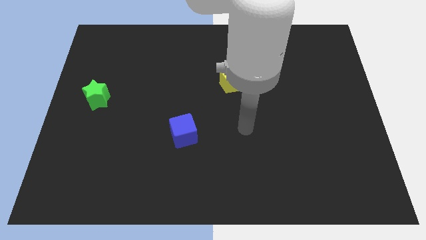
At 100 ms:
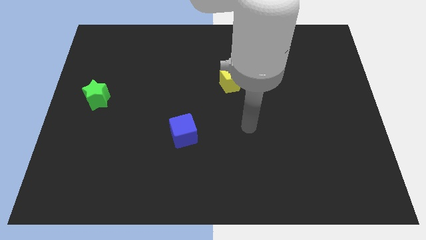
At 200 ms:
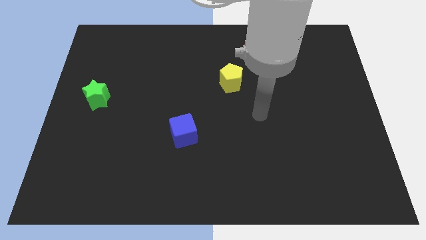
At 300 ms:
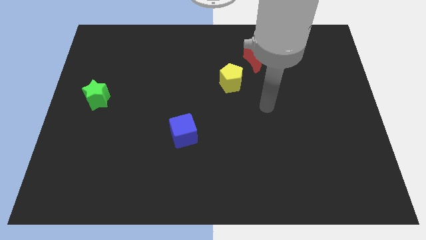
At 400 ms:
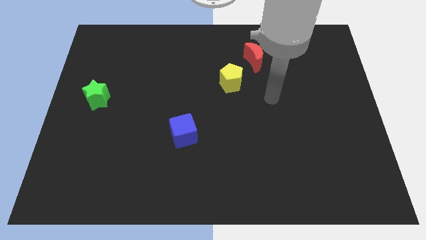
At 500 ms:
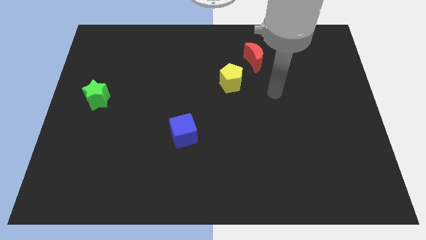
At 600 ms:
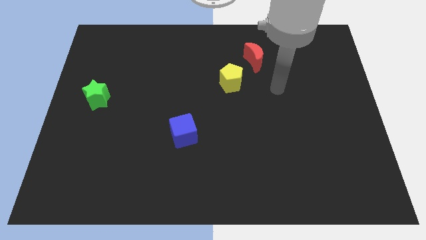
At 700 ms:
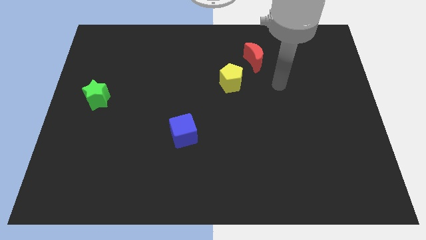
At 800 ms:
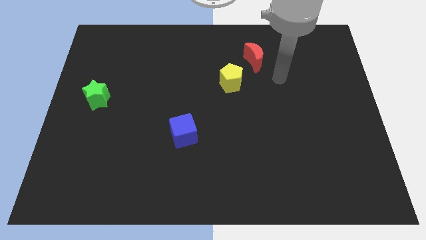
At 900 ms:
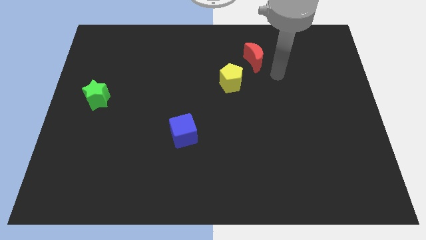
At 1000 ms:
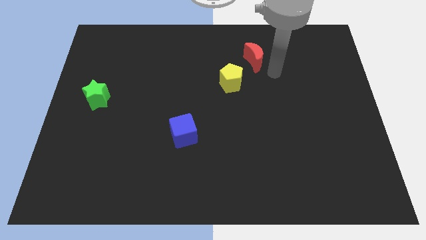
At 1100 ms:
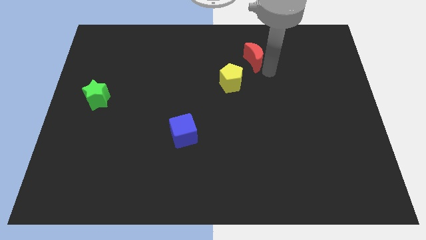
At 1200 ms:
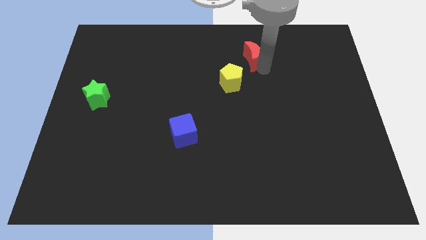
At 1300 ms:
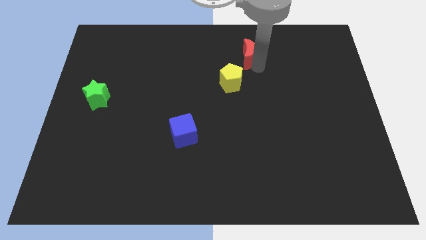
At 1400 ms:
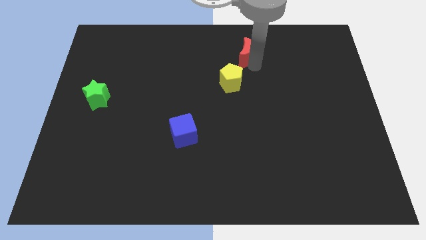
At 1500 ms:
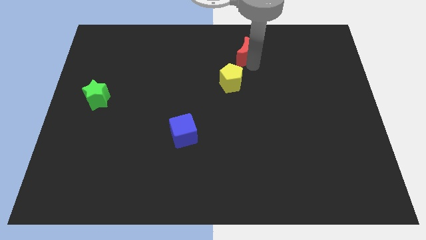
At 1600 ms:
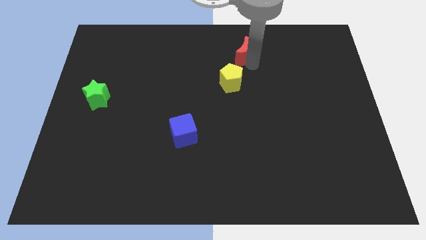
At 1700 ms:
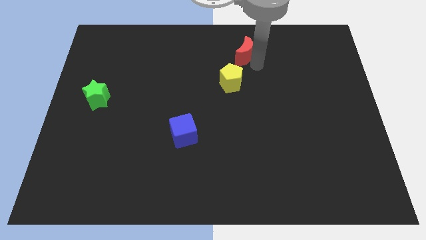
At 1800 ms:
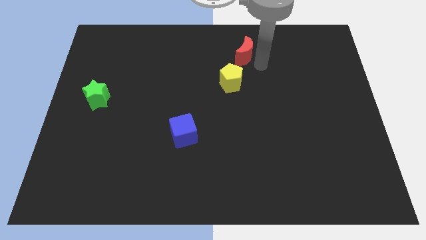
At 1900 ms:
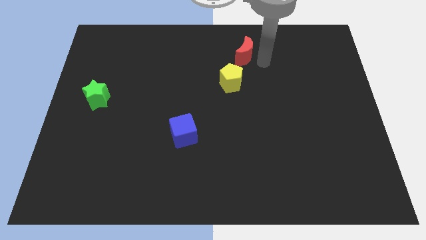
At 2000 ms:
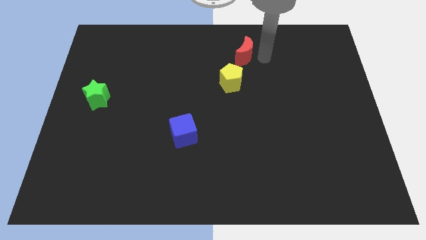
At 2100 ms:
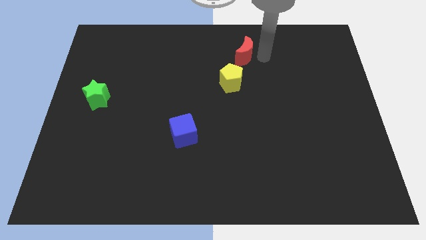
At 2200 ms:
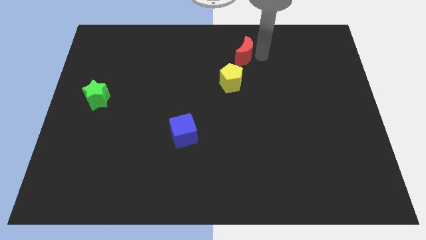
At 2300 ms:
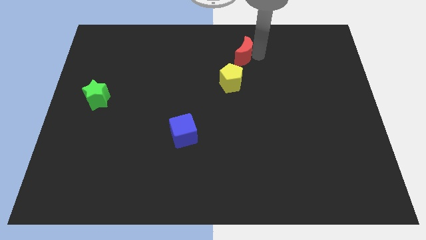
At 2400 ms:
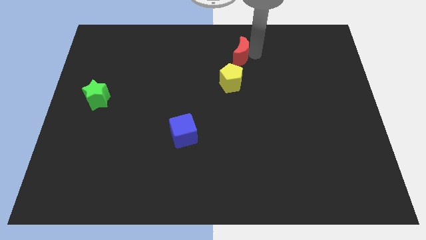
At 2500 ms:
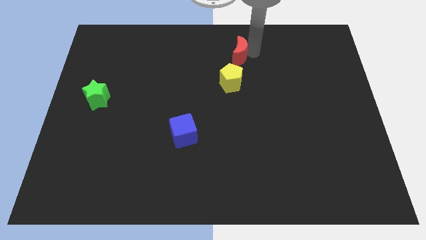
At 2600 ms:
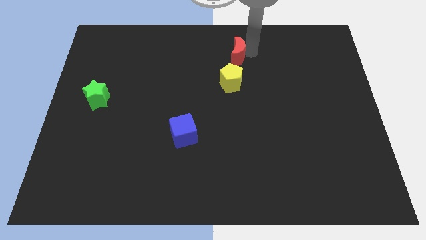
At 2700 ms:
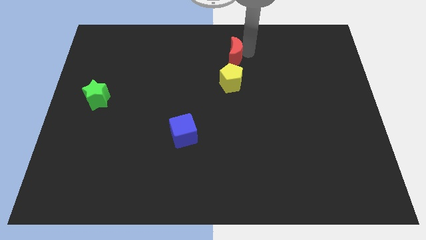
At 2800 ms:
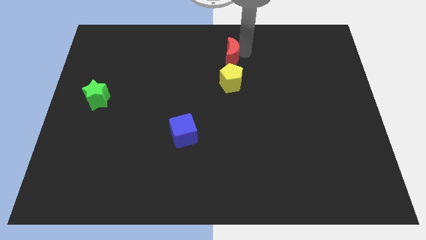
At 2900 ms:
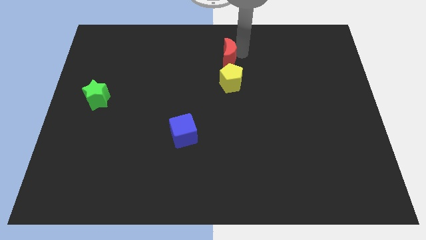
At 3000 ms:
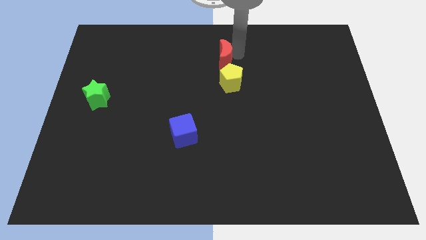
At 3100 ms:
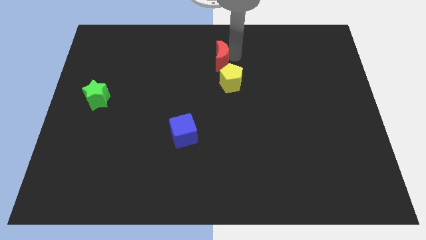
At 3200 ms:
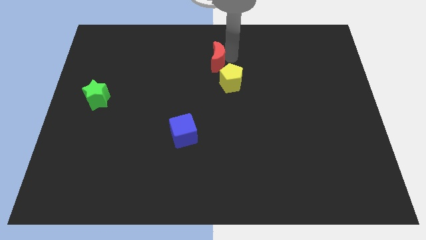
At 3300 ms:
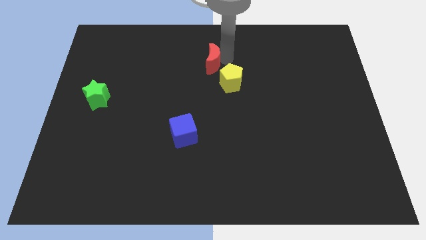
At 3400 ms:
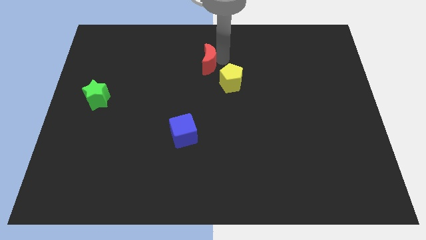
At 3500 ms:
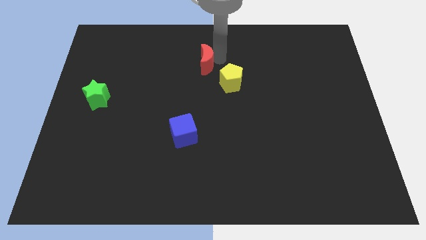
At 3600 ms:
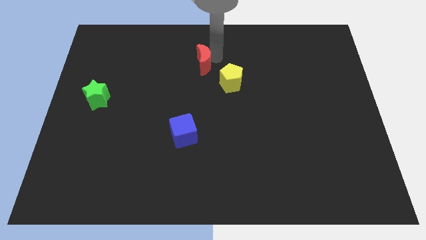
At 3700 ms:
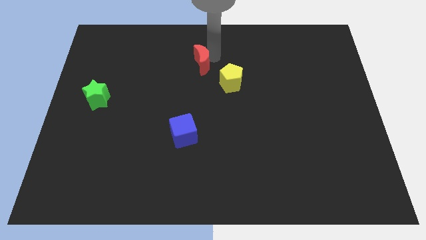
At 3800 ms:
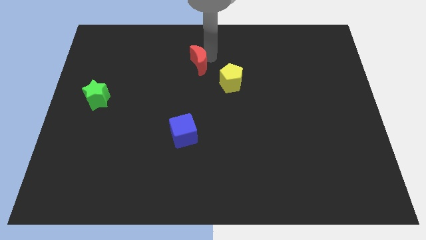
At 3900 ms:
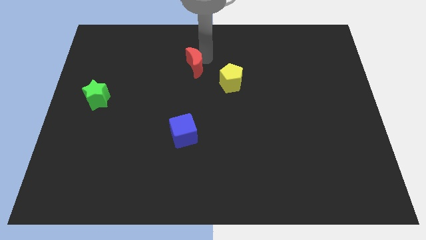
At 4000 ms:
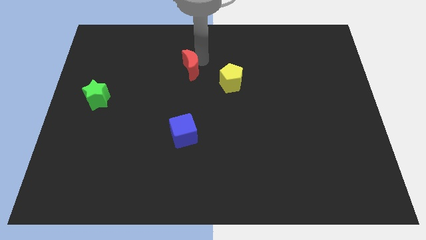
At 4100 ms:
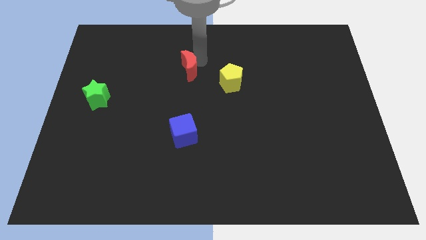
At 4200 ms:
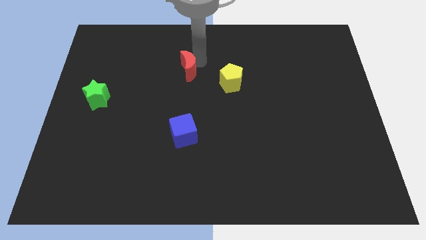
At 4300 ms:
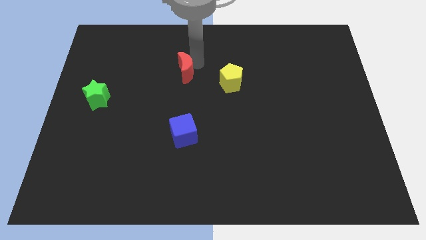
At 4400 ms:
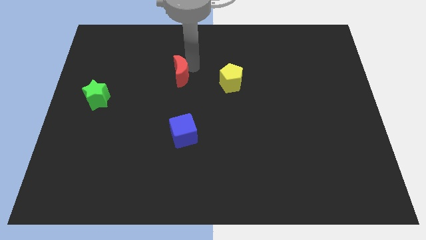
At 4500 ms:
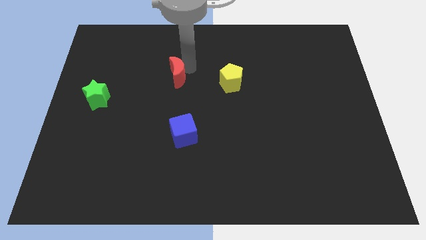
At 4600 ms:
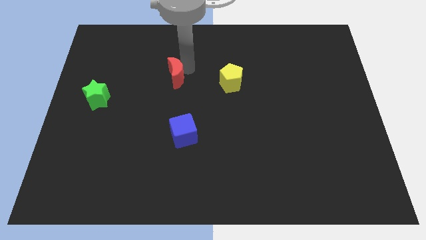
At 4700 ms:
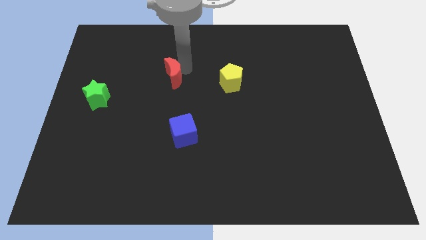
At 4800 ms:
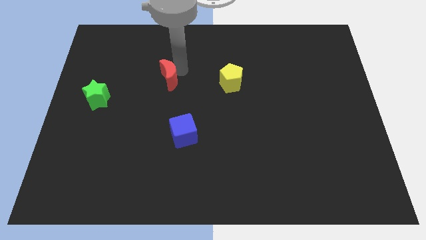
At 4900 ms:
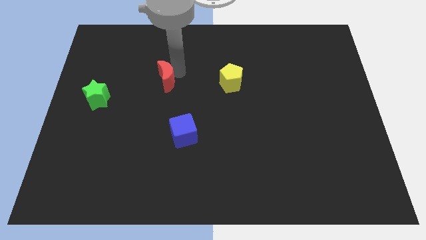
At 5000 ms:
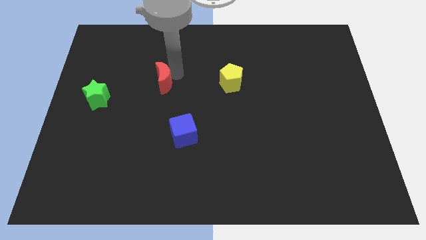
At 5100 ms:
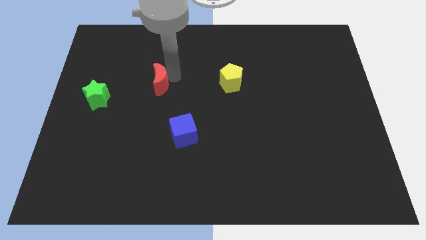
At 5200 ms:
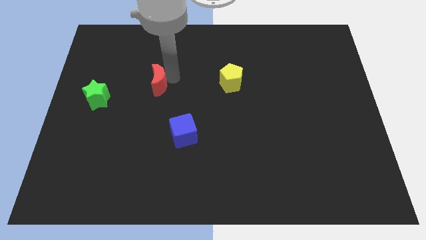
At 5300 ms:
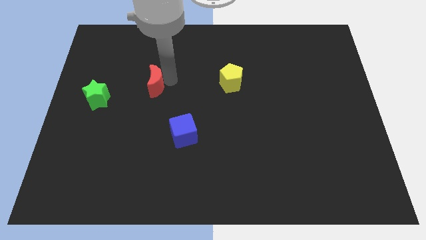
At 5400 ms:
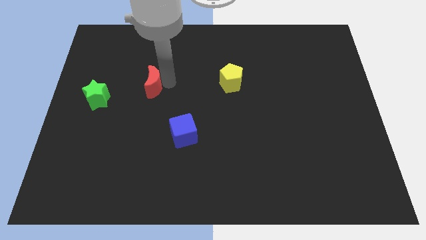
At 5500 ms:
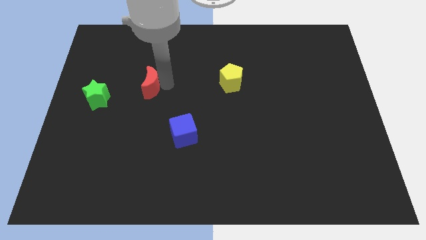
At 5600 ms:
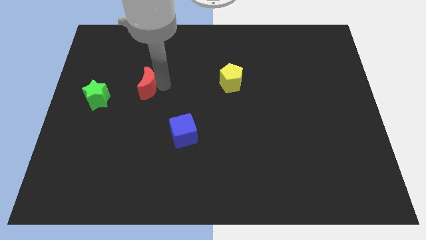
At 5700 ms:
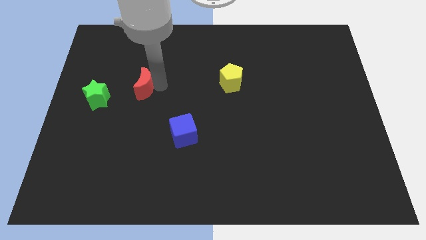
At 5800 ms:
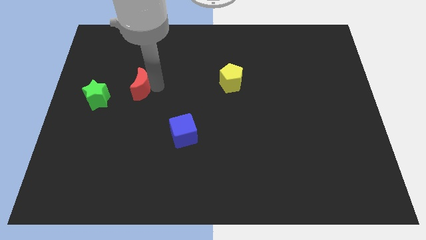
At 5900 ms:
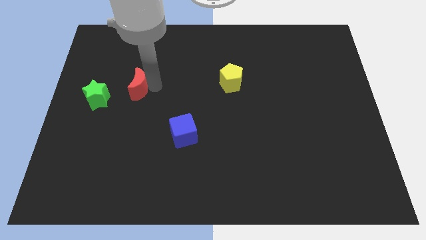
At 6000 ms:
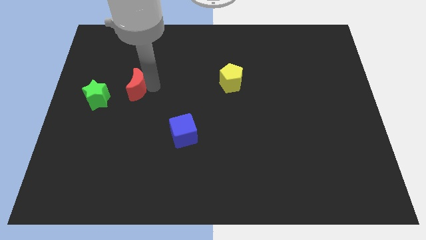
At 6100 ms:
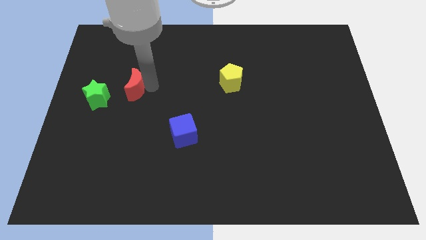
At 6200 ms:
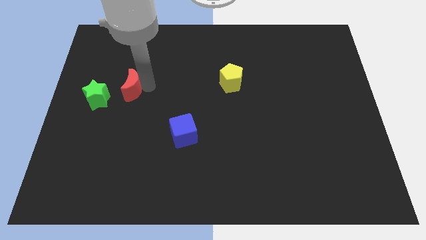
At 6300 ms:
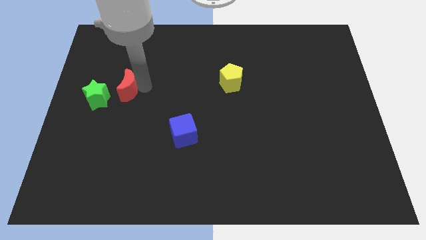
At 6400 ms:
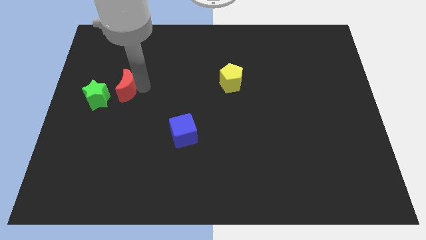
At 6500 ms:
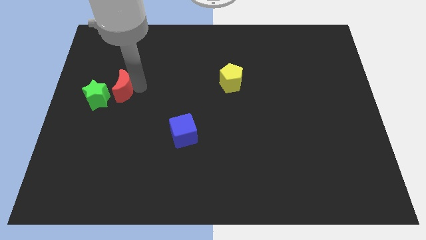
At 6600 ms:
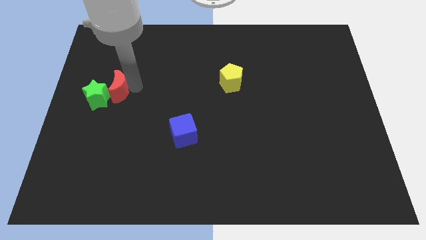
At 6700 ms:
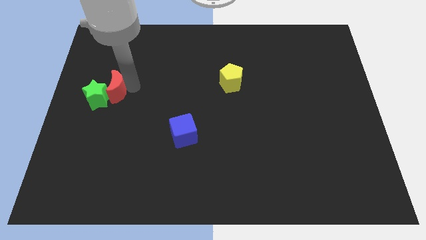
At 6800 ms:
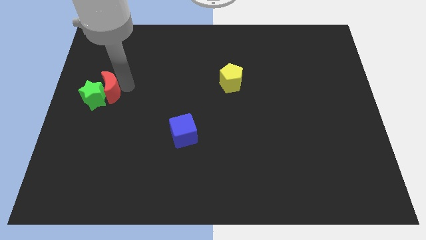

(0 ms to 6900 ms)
push the red moon next to the green block

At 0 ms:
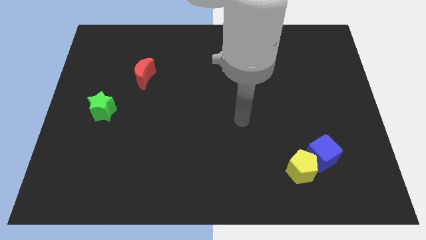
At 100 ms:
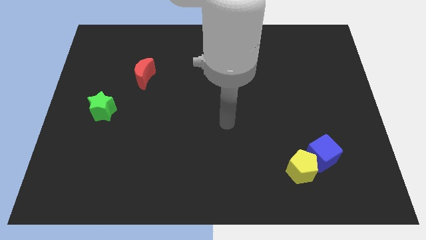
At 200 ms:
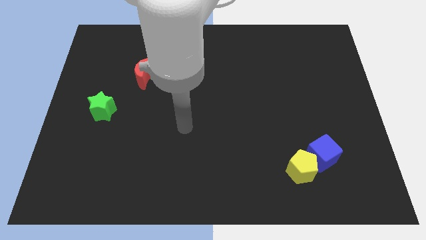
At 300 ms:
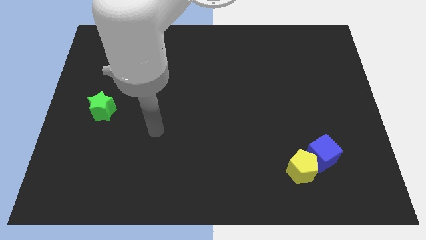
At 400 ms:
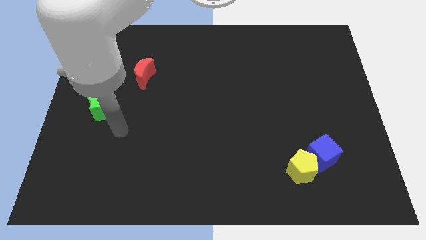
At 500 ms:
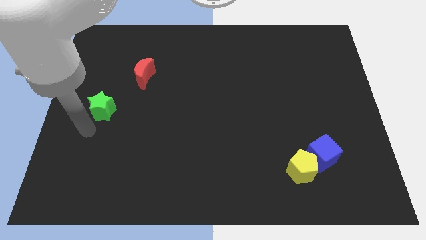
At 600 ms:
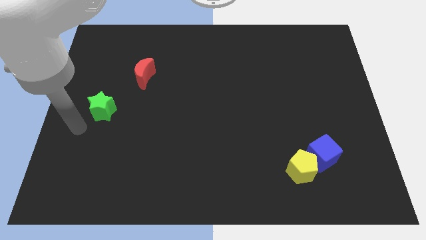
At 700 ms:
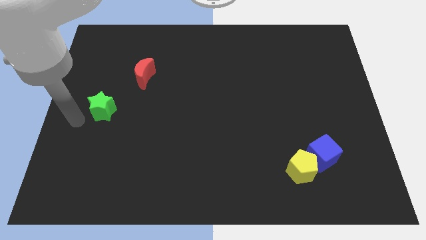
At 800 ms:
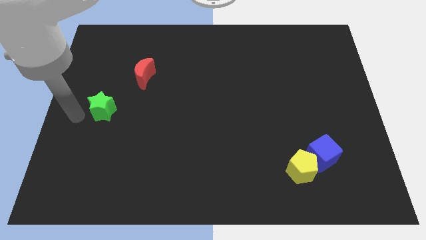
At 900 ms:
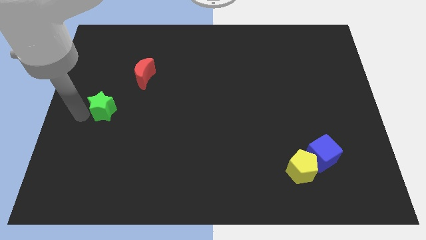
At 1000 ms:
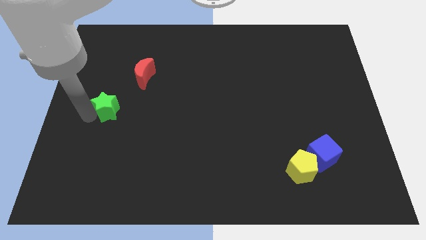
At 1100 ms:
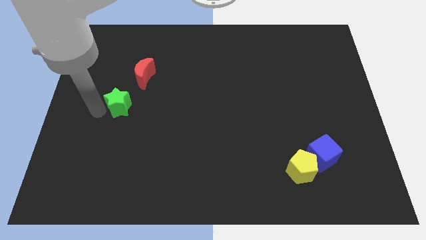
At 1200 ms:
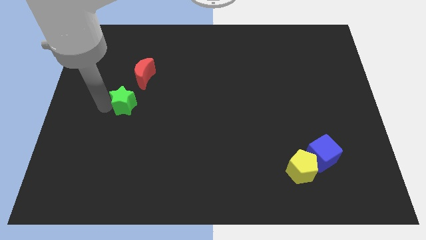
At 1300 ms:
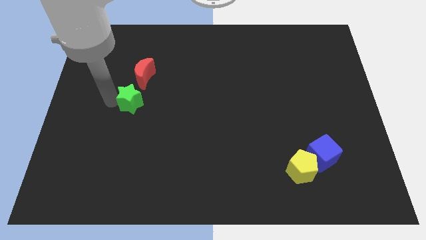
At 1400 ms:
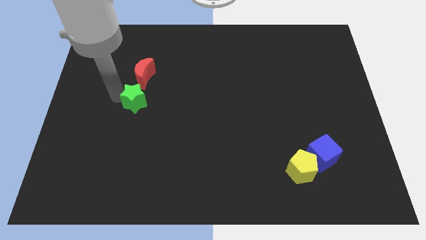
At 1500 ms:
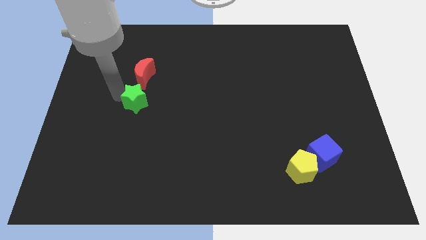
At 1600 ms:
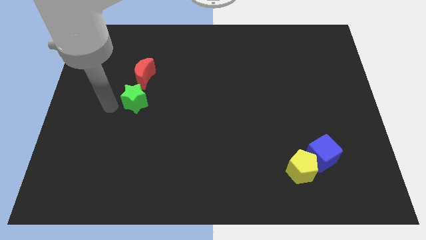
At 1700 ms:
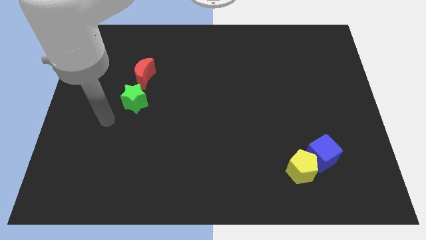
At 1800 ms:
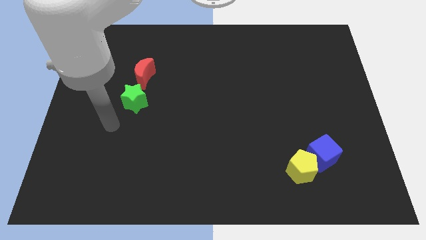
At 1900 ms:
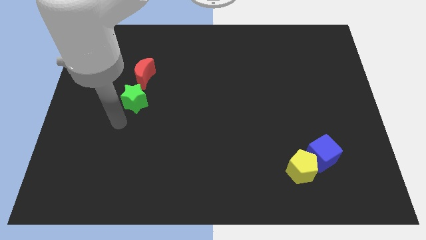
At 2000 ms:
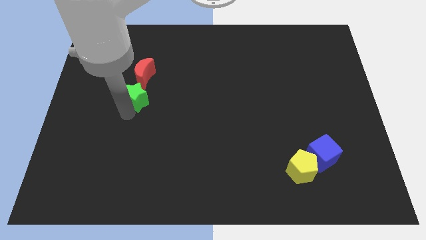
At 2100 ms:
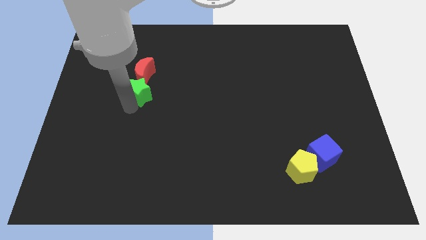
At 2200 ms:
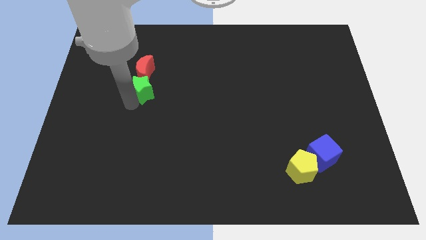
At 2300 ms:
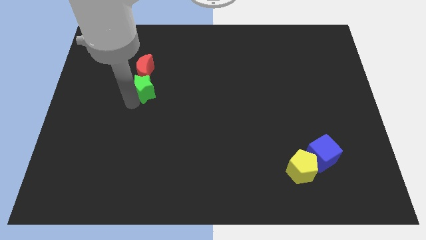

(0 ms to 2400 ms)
slide the green star close to the red moon
